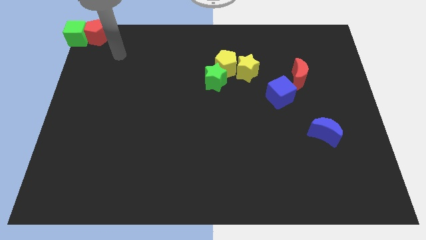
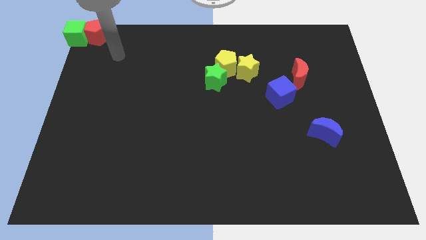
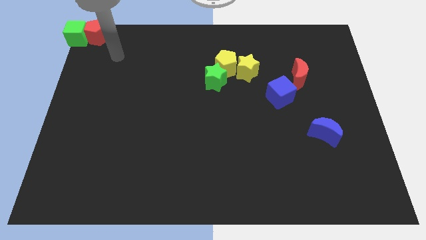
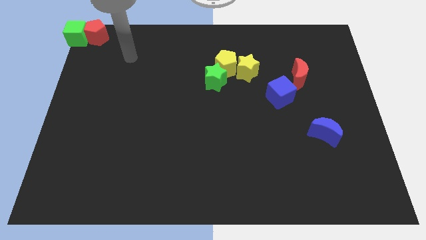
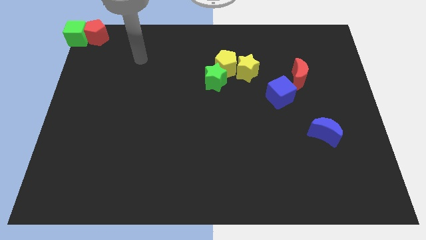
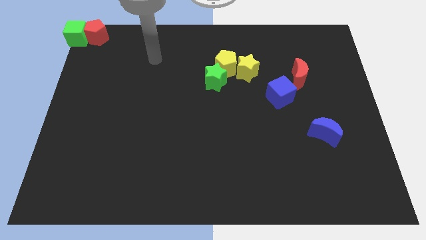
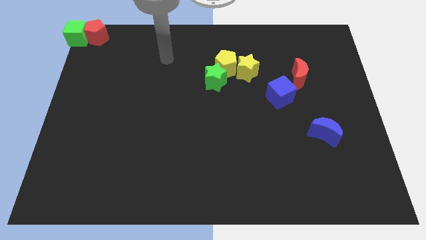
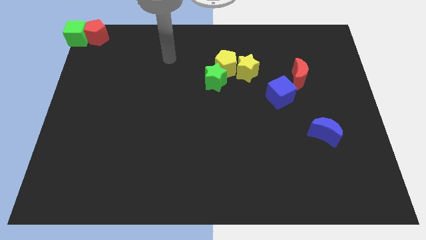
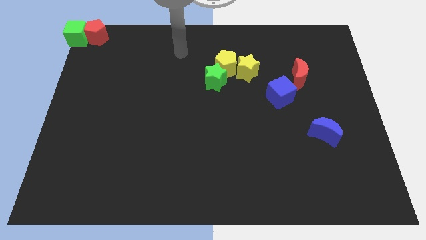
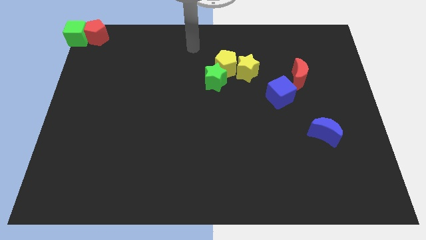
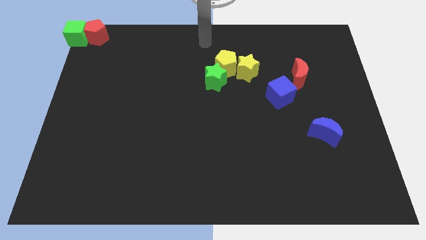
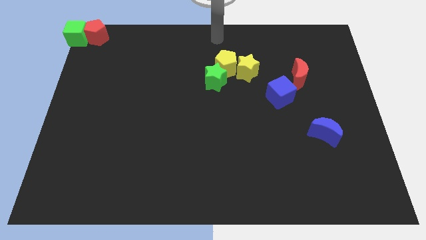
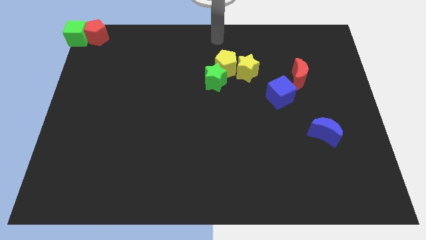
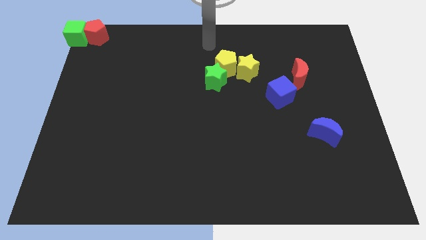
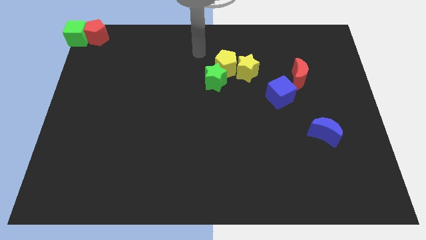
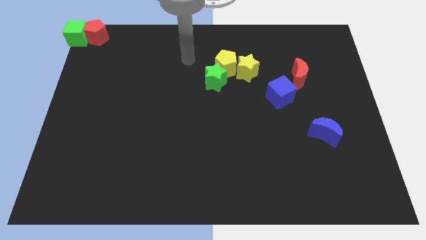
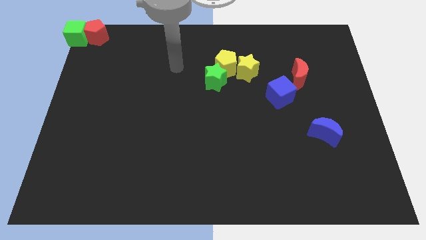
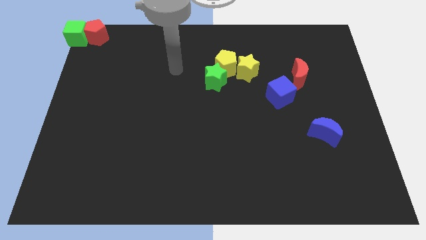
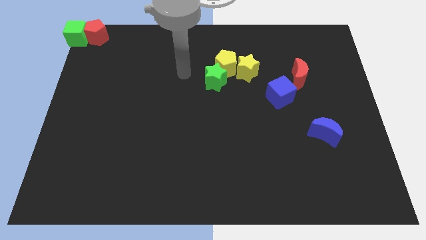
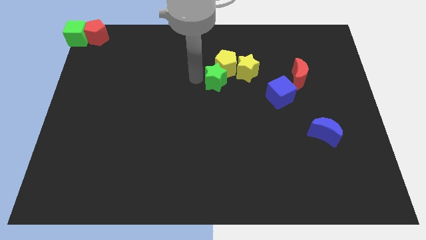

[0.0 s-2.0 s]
move your arm to the left of the green star

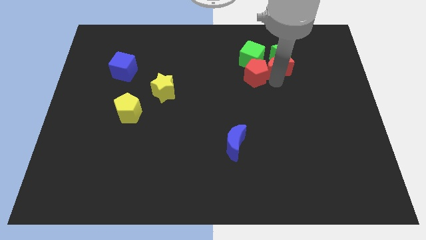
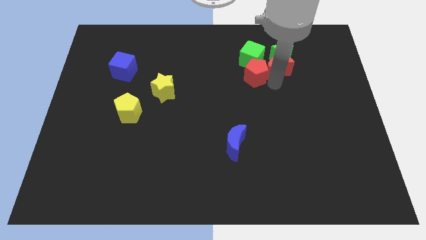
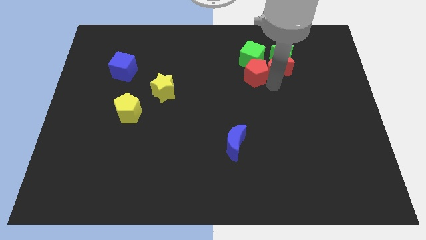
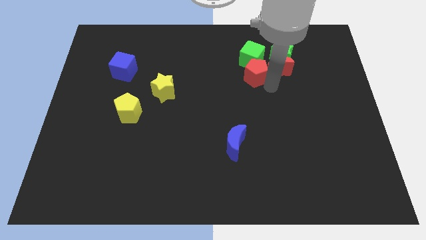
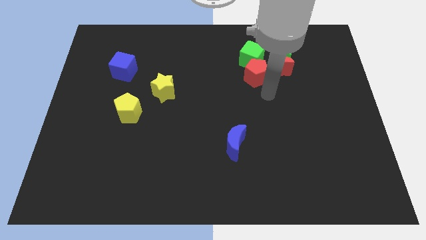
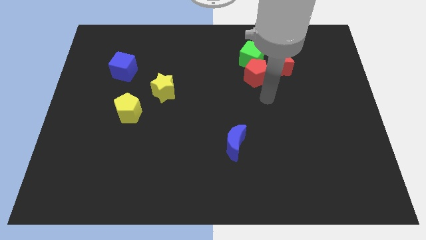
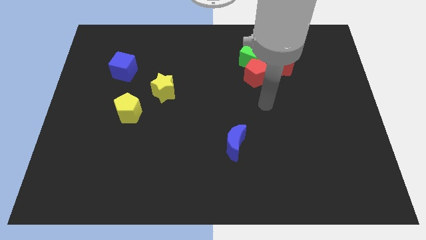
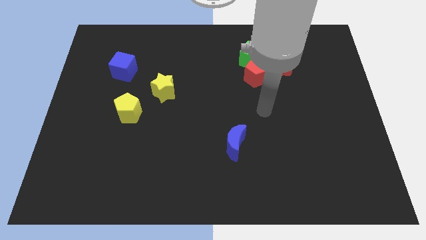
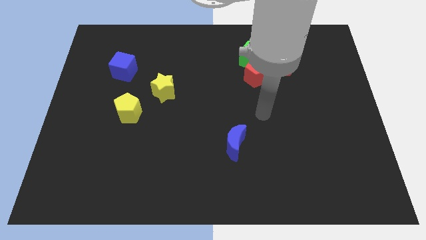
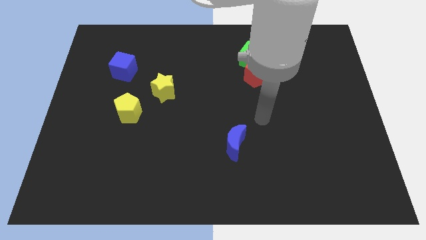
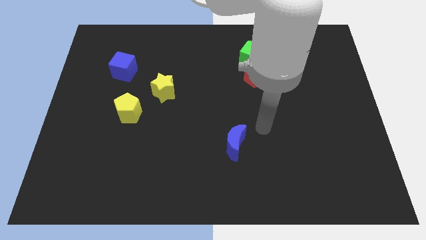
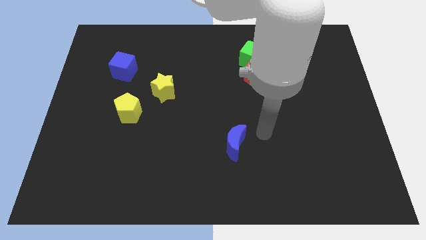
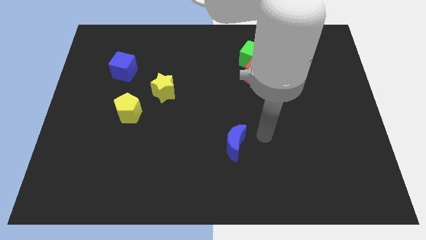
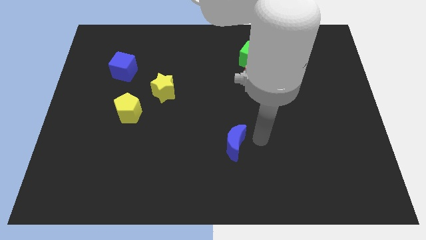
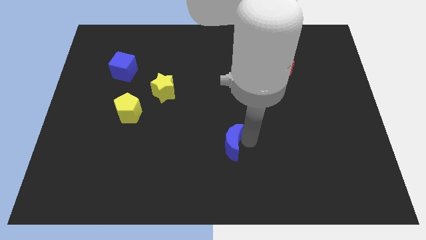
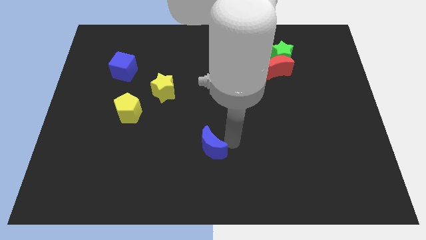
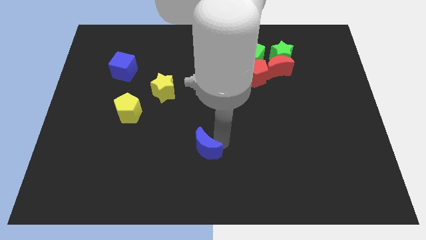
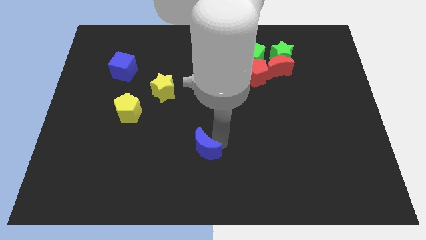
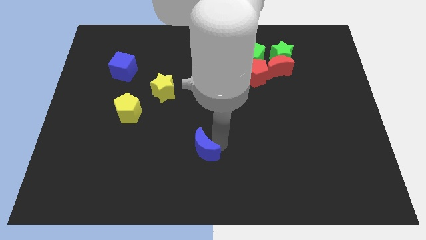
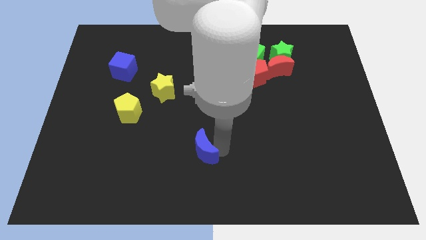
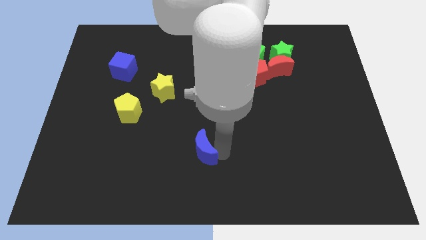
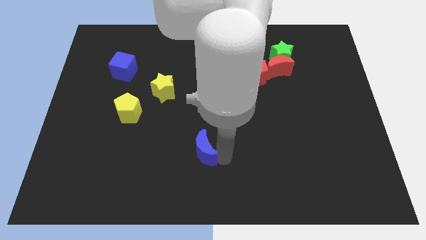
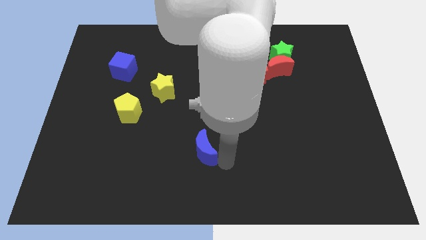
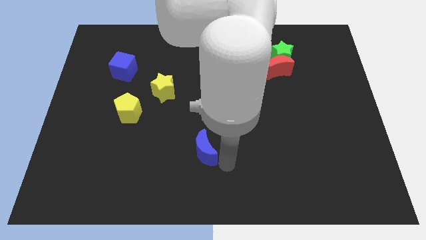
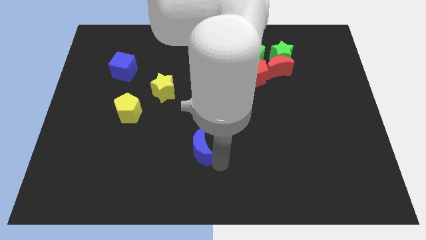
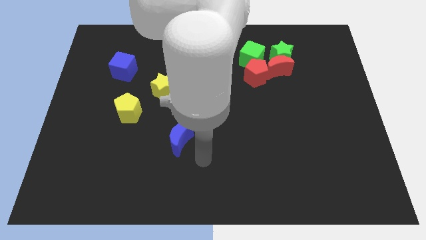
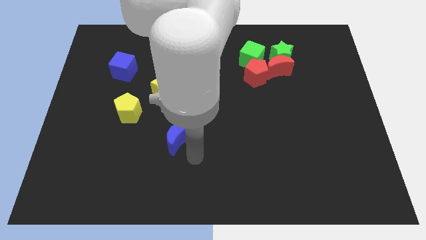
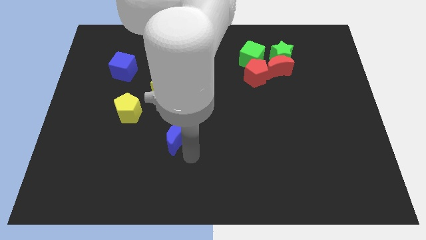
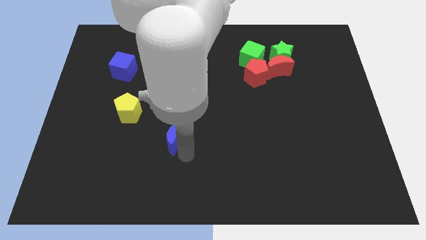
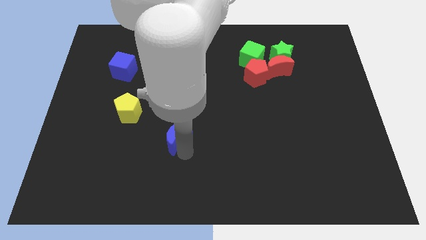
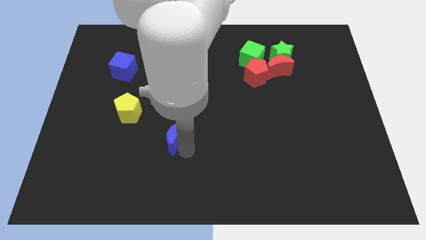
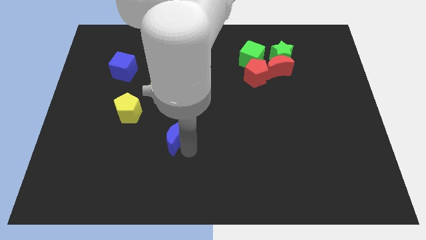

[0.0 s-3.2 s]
move blue moon parallel to the yellow star

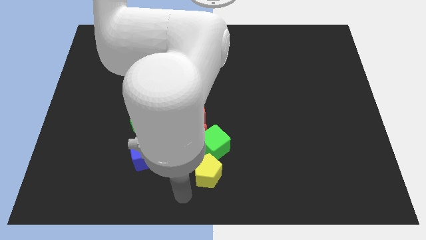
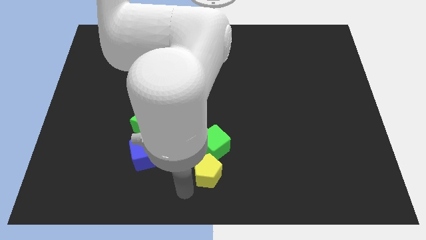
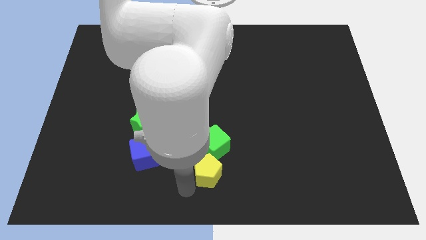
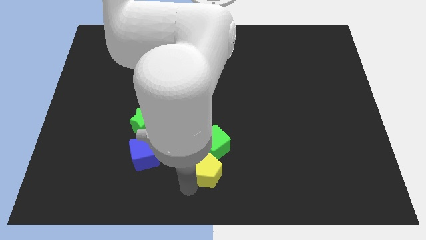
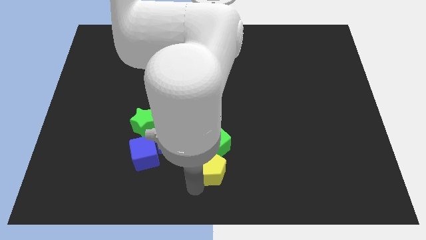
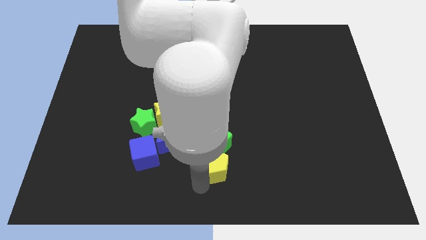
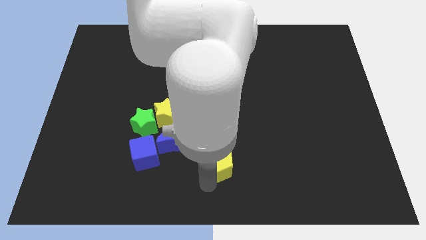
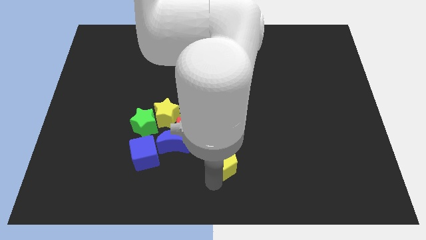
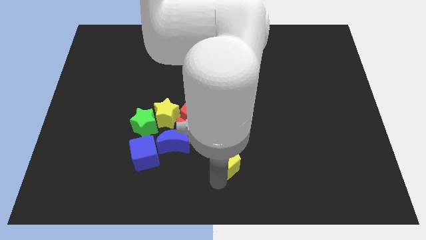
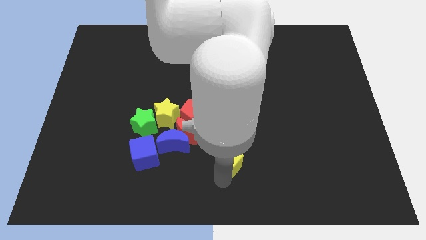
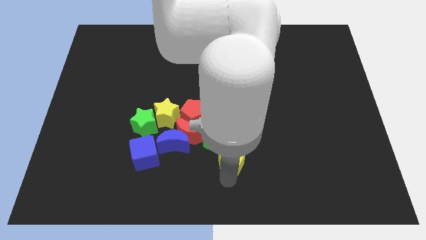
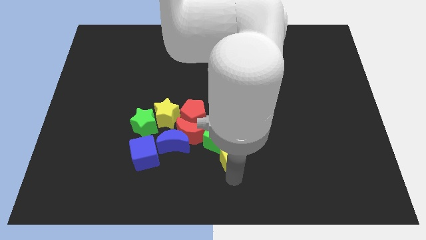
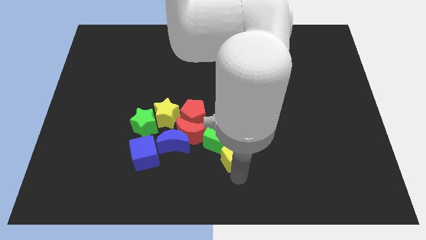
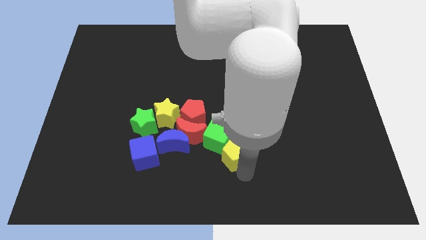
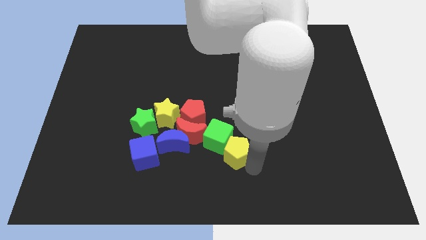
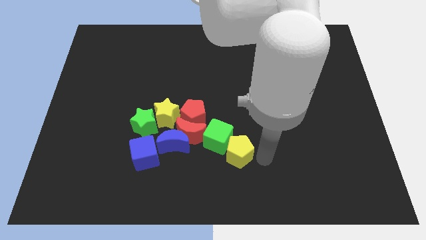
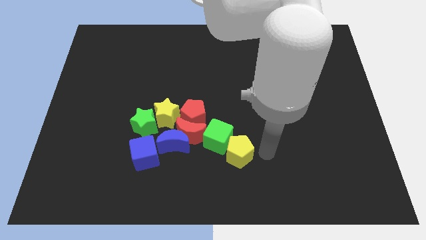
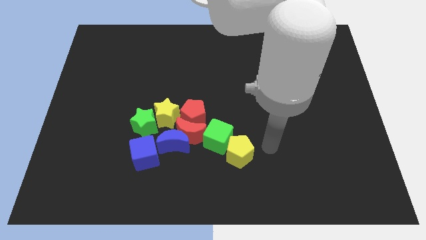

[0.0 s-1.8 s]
move the yellow pentagon to the right side of the green cube

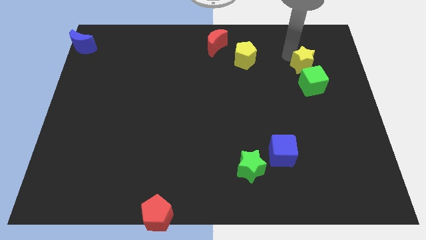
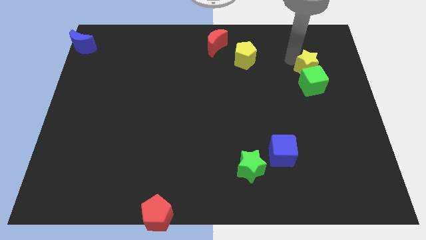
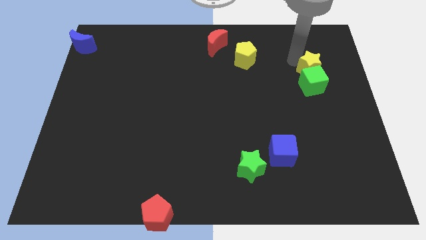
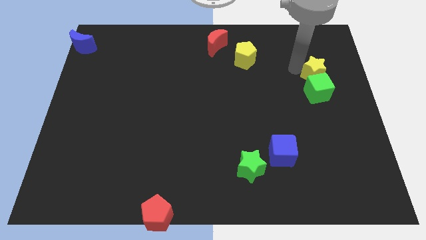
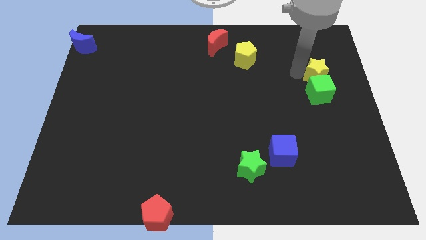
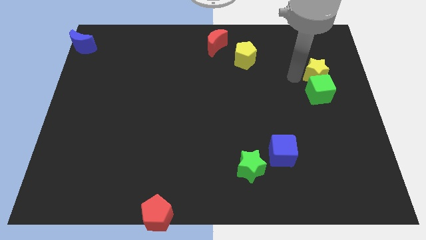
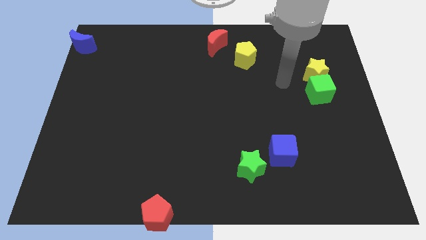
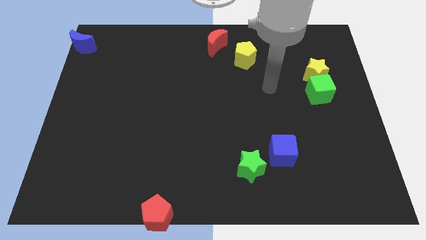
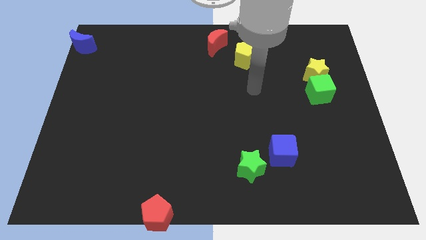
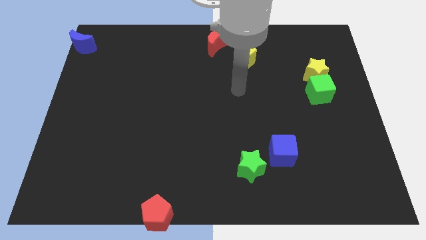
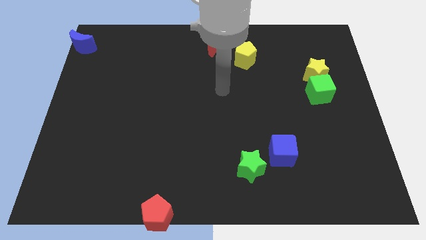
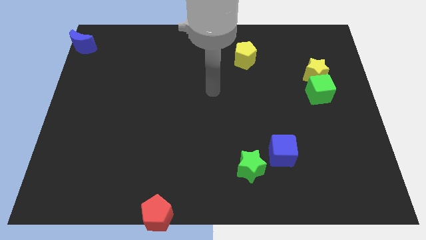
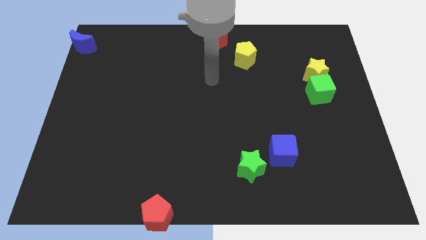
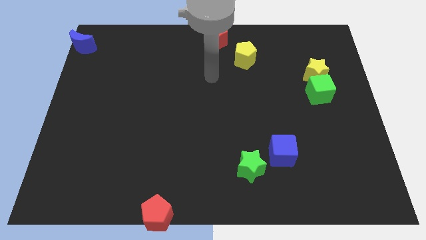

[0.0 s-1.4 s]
slightly push the yellow star and green cube

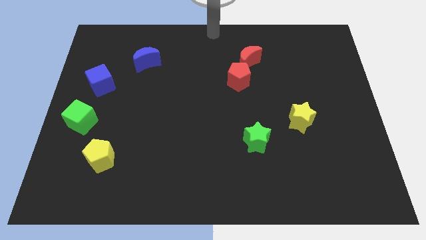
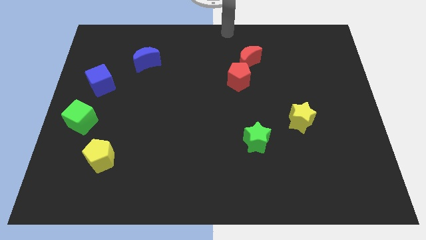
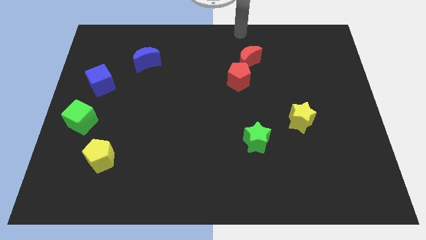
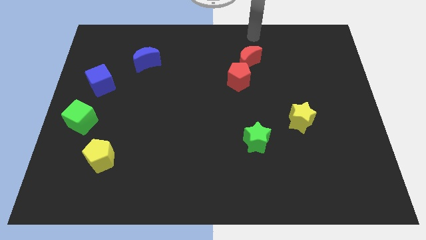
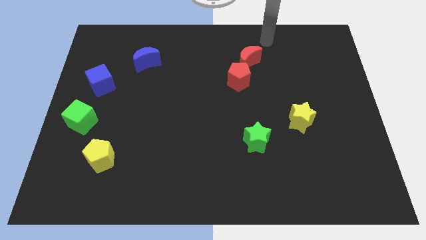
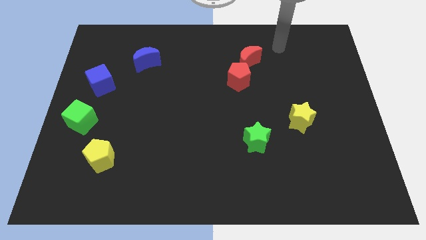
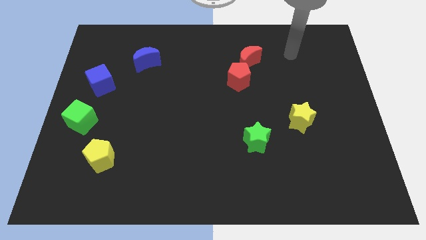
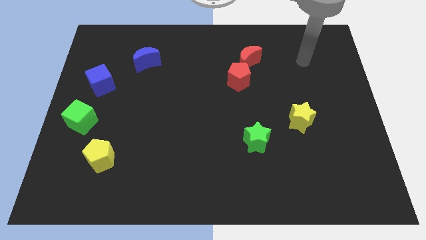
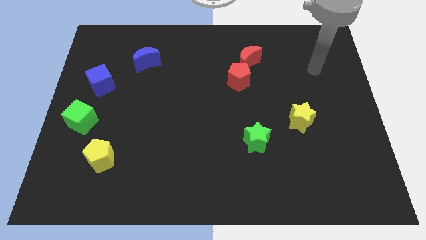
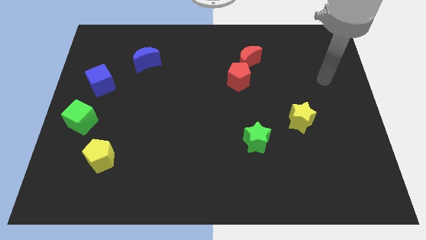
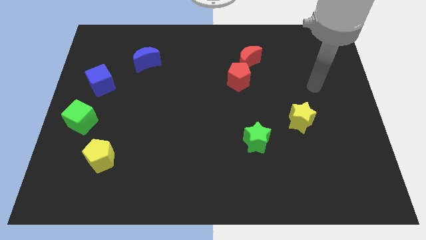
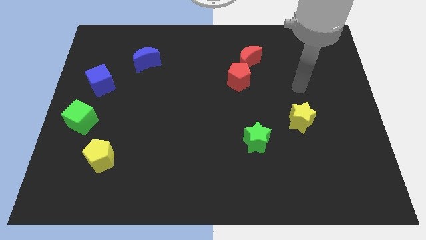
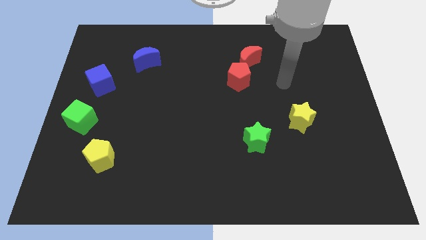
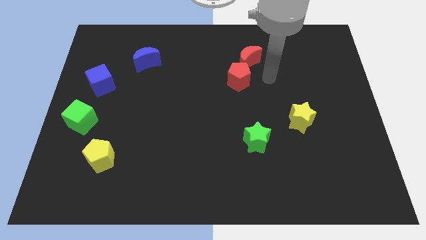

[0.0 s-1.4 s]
move the arm toward right to the red pentagon
